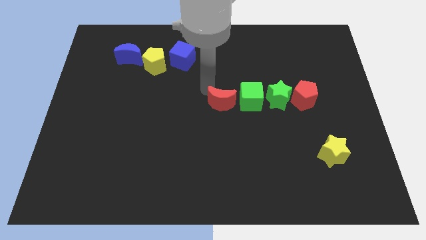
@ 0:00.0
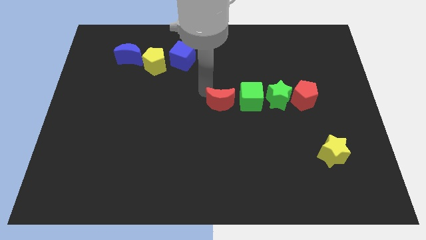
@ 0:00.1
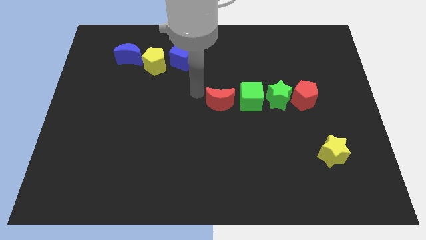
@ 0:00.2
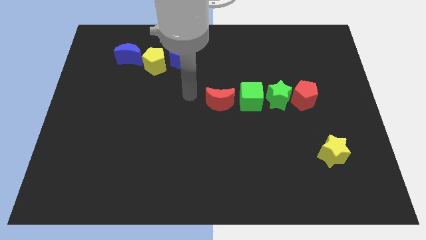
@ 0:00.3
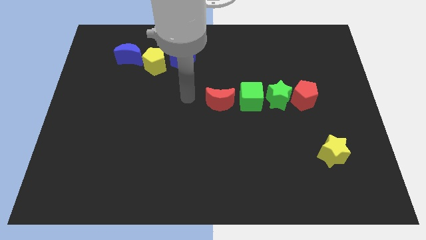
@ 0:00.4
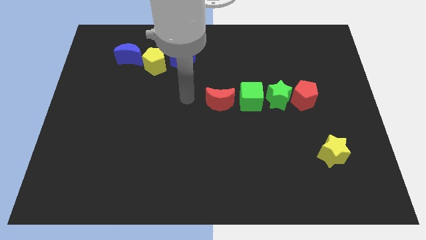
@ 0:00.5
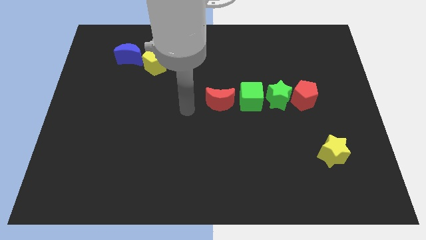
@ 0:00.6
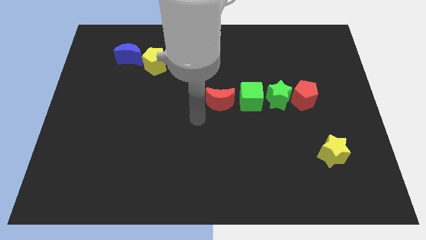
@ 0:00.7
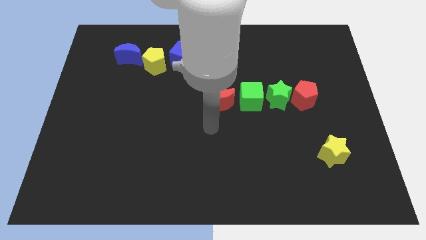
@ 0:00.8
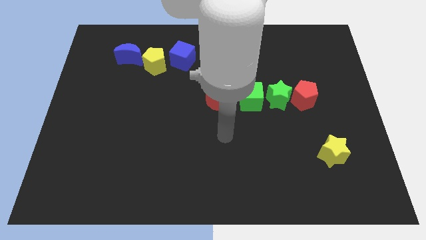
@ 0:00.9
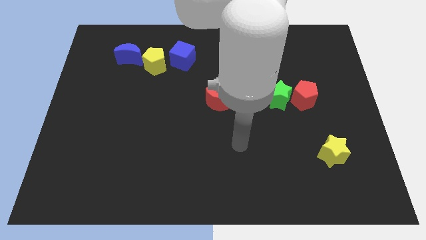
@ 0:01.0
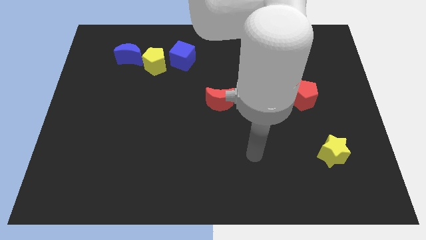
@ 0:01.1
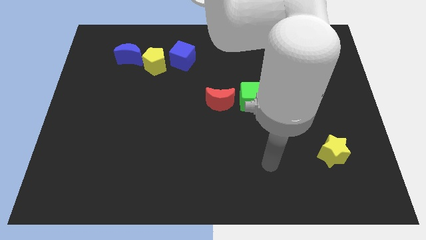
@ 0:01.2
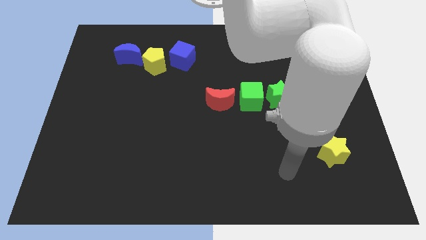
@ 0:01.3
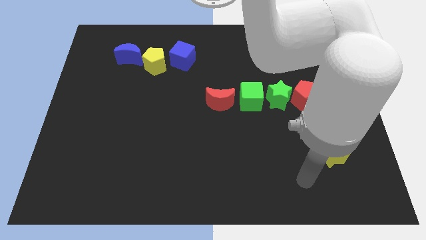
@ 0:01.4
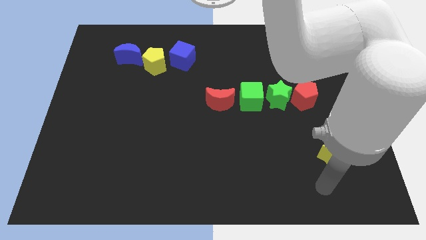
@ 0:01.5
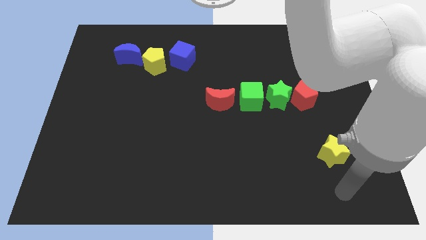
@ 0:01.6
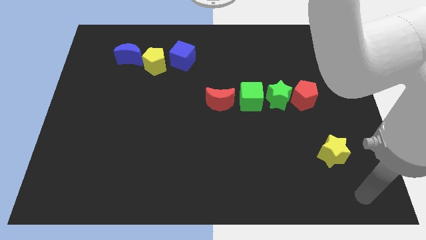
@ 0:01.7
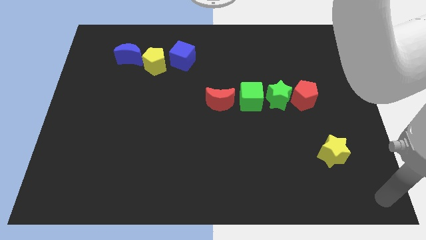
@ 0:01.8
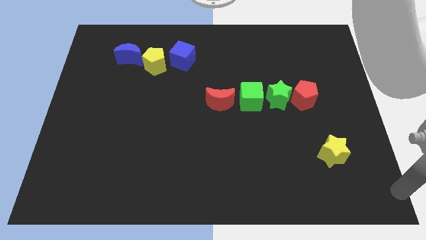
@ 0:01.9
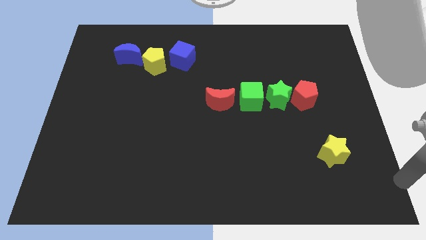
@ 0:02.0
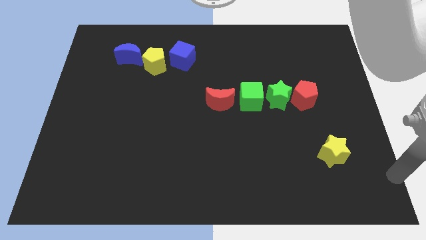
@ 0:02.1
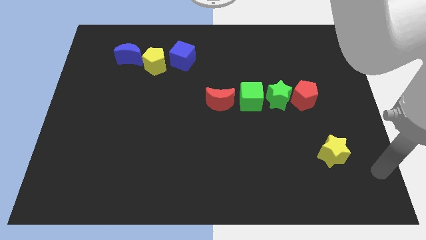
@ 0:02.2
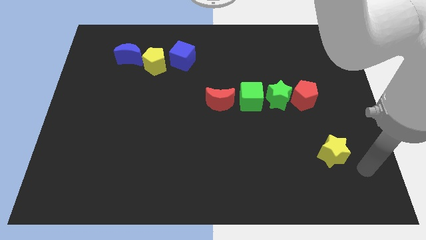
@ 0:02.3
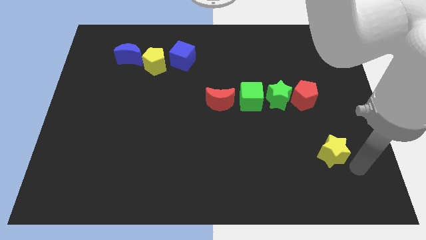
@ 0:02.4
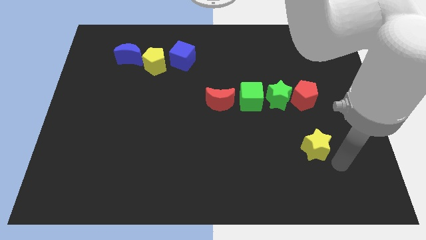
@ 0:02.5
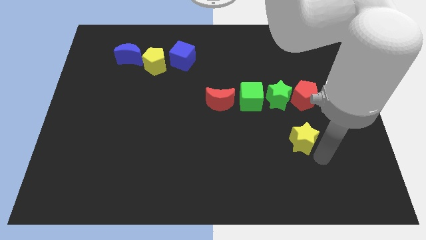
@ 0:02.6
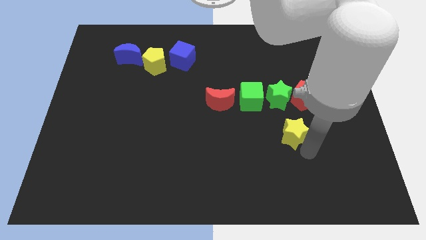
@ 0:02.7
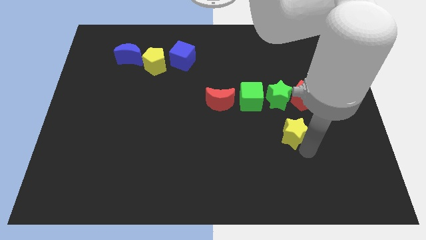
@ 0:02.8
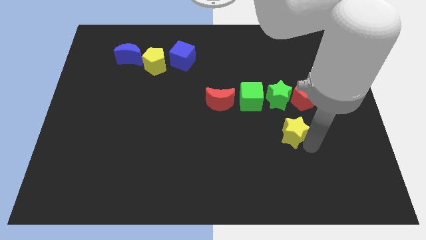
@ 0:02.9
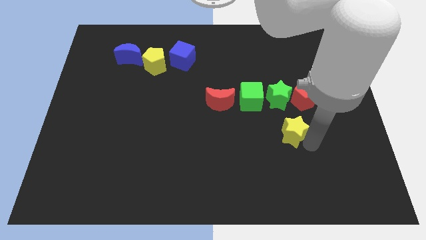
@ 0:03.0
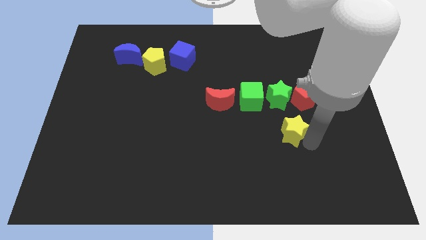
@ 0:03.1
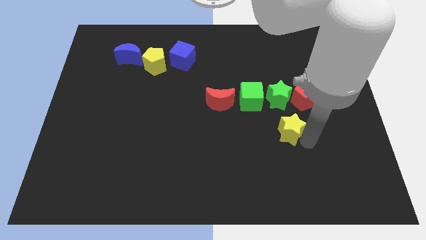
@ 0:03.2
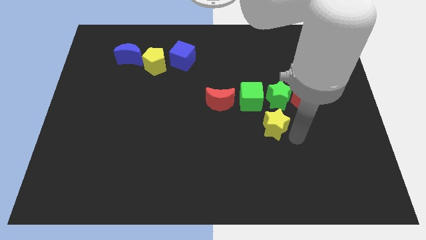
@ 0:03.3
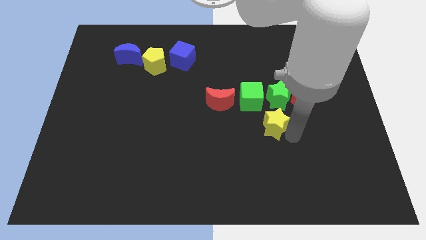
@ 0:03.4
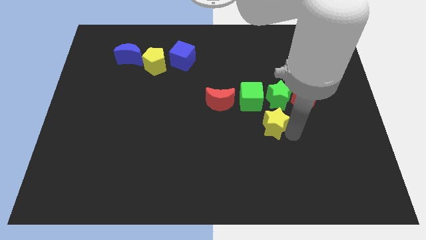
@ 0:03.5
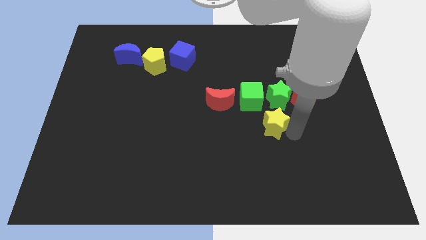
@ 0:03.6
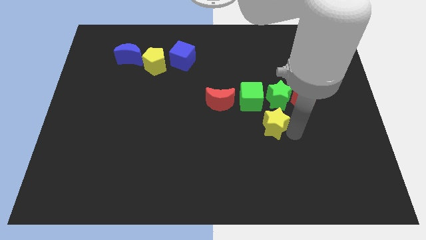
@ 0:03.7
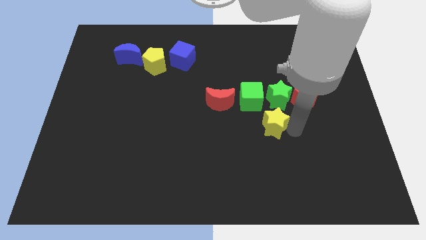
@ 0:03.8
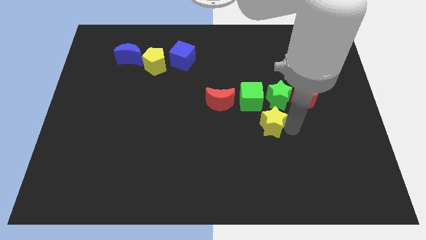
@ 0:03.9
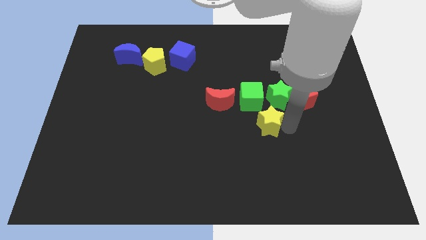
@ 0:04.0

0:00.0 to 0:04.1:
move yellow star below green cubes

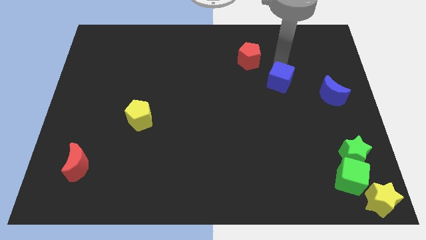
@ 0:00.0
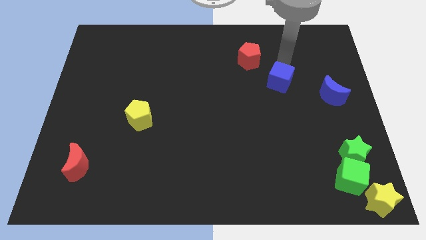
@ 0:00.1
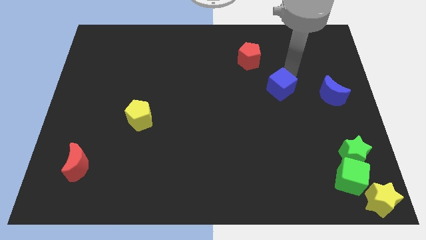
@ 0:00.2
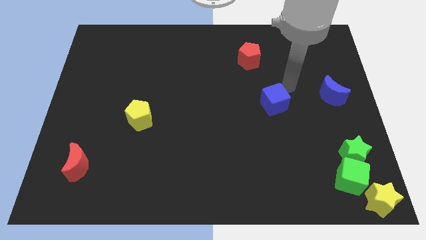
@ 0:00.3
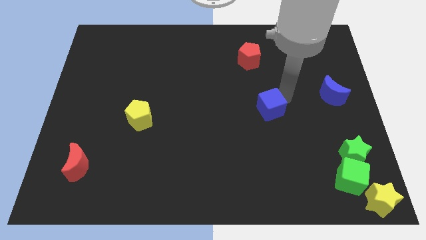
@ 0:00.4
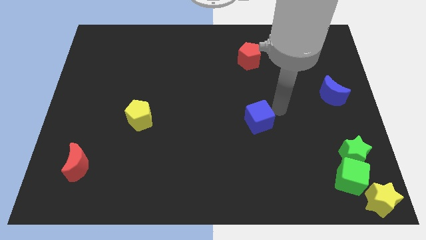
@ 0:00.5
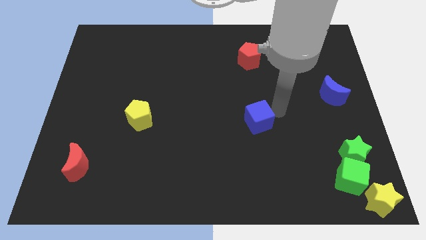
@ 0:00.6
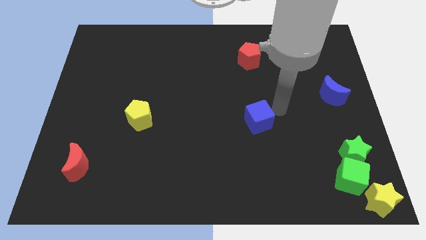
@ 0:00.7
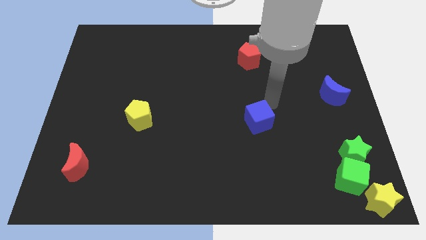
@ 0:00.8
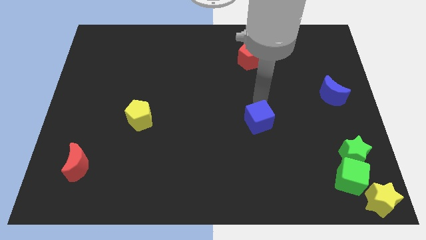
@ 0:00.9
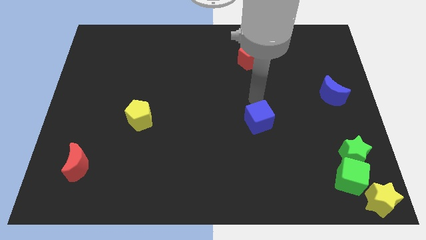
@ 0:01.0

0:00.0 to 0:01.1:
push the blue cube to the center

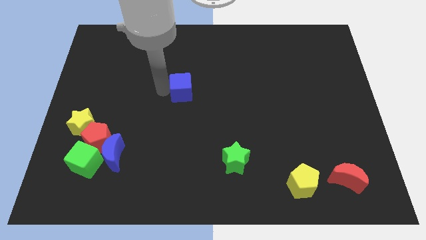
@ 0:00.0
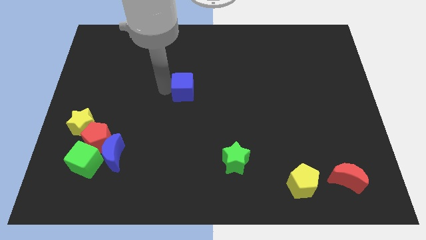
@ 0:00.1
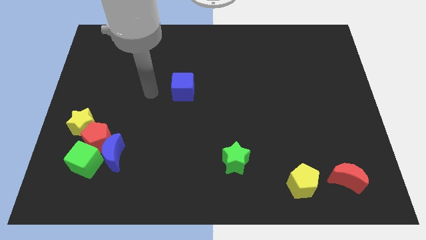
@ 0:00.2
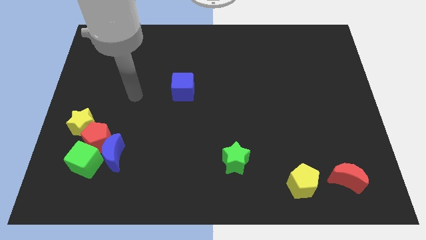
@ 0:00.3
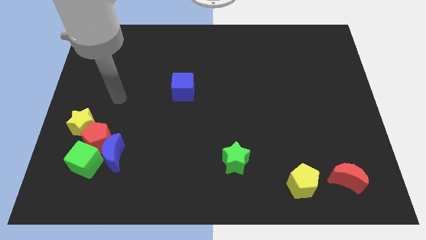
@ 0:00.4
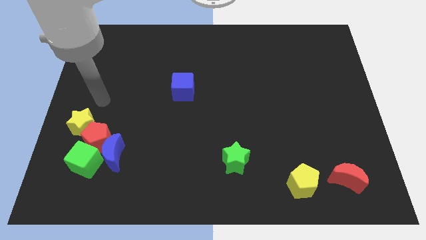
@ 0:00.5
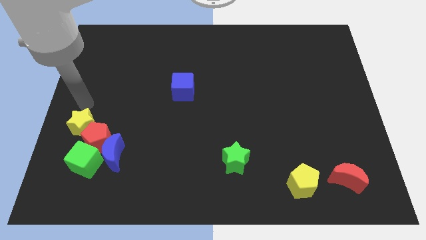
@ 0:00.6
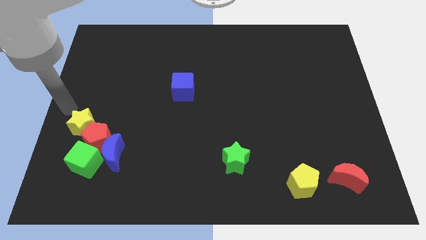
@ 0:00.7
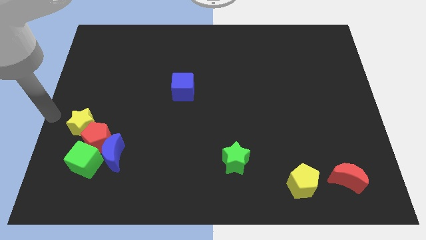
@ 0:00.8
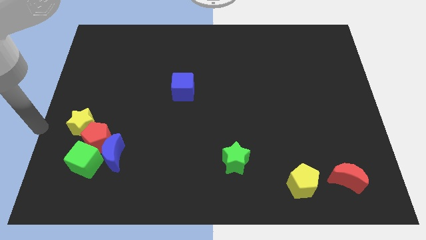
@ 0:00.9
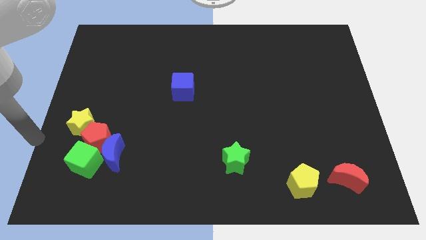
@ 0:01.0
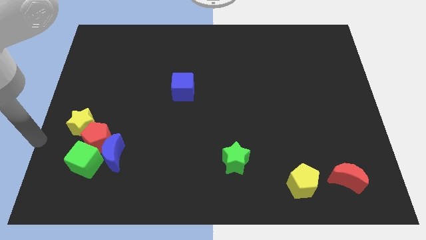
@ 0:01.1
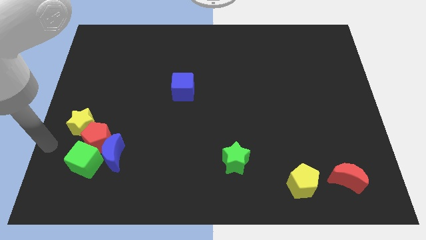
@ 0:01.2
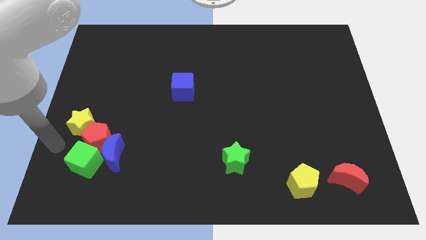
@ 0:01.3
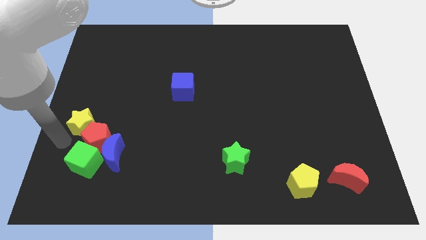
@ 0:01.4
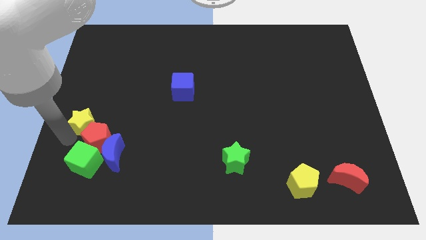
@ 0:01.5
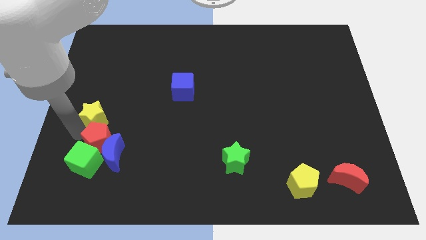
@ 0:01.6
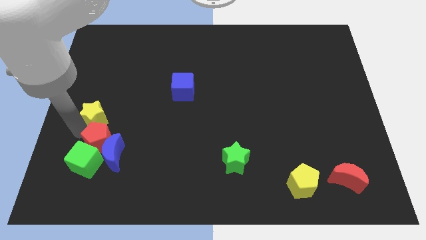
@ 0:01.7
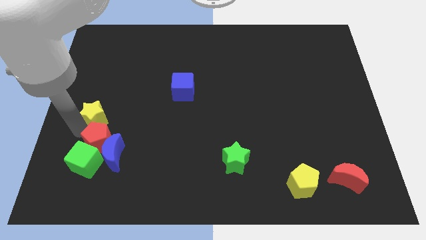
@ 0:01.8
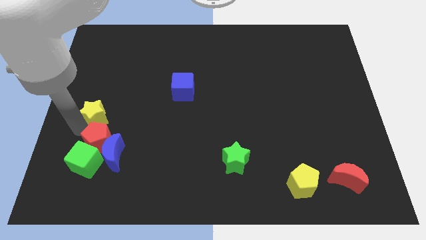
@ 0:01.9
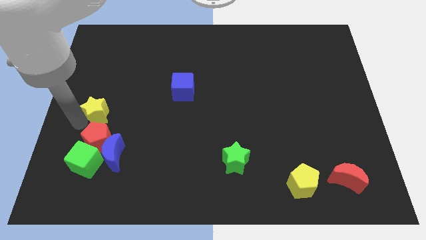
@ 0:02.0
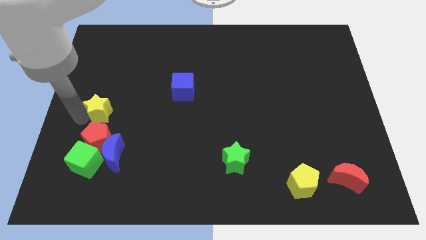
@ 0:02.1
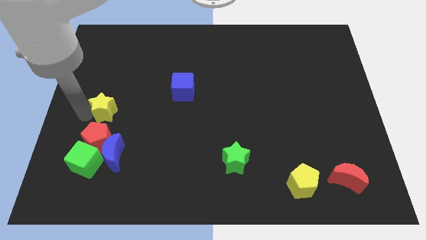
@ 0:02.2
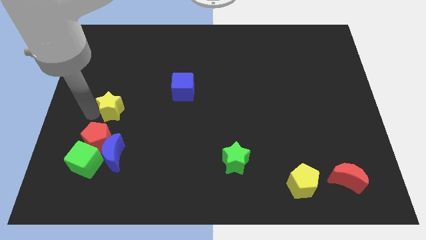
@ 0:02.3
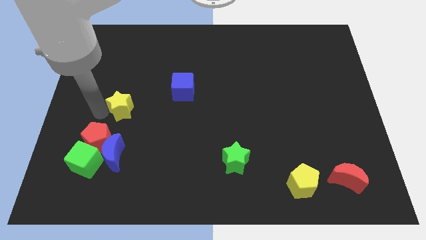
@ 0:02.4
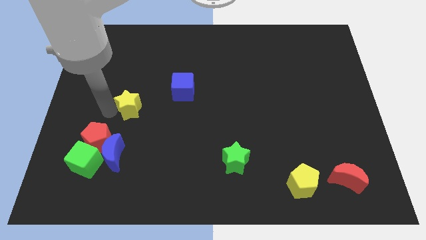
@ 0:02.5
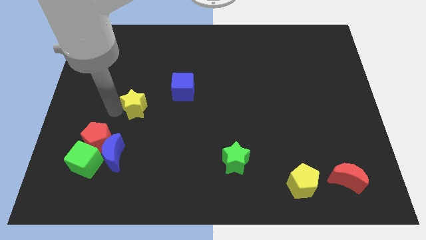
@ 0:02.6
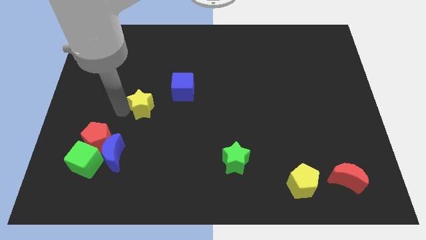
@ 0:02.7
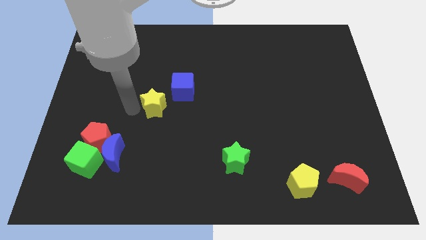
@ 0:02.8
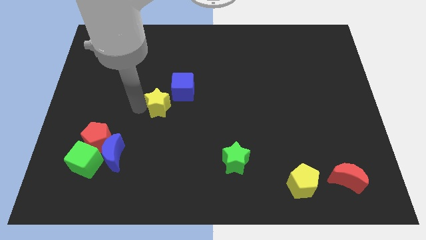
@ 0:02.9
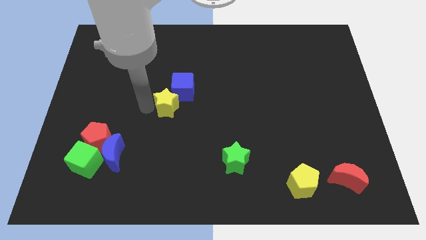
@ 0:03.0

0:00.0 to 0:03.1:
put the yellow star at the bottom left side of blue cube

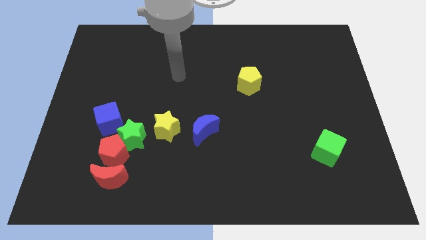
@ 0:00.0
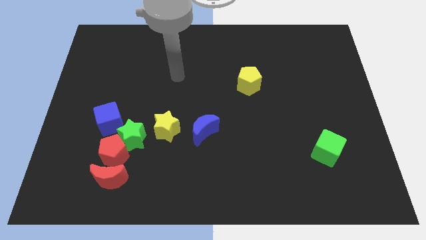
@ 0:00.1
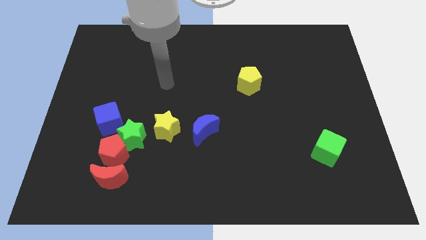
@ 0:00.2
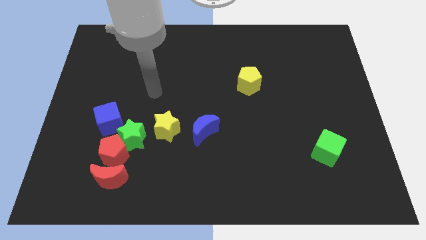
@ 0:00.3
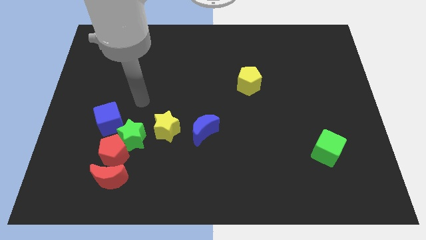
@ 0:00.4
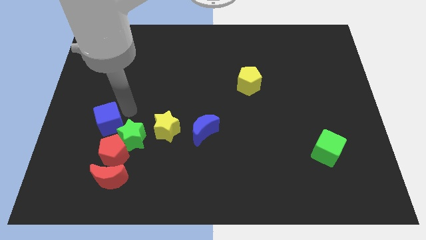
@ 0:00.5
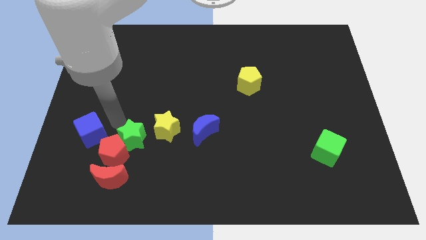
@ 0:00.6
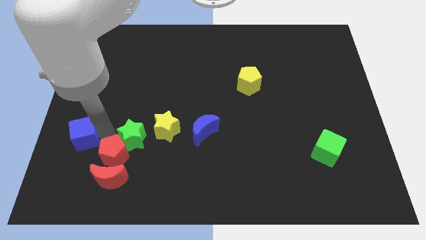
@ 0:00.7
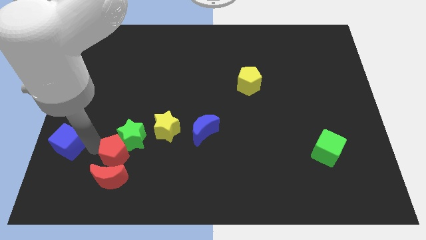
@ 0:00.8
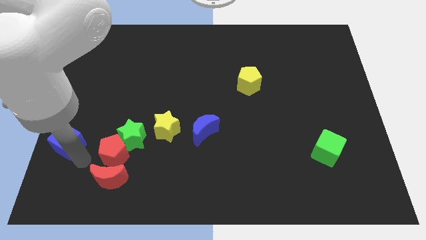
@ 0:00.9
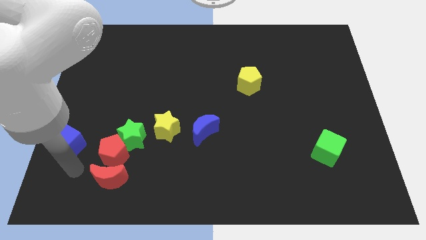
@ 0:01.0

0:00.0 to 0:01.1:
push the blue cube to the left of the red pentagon
